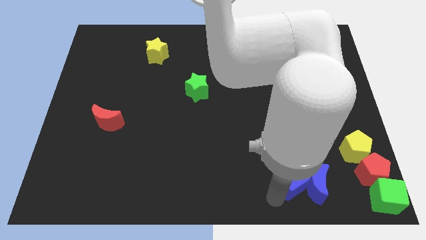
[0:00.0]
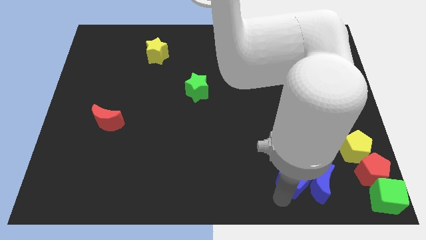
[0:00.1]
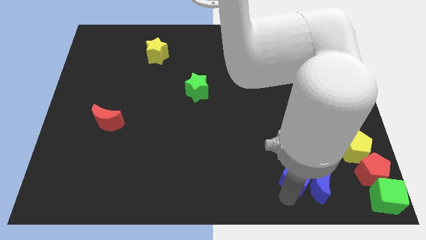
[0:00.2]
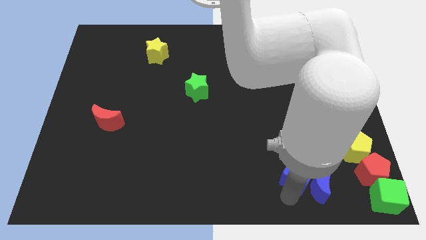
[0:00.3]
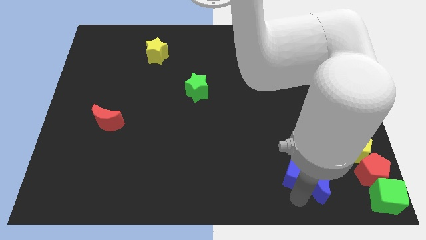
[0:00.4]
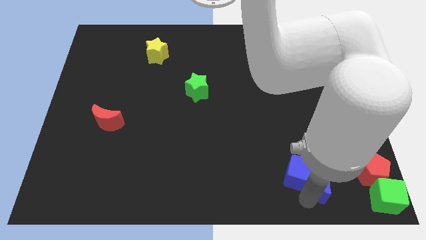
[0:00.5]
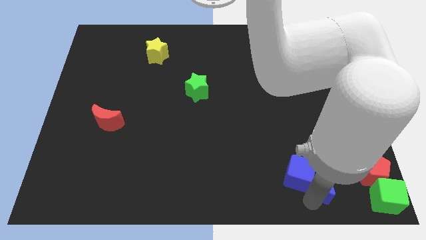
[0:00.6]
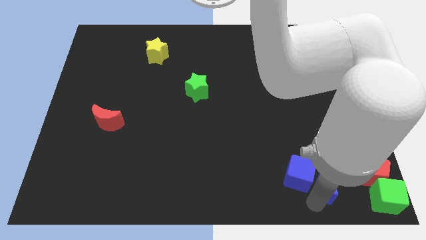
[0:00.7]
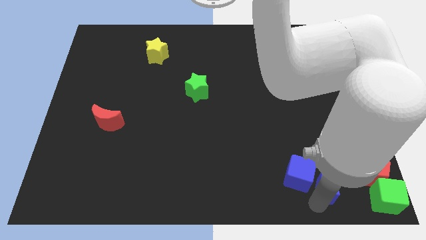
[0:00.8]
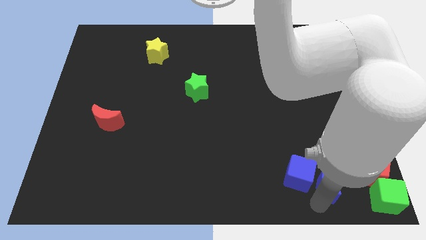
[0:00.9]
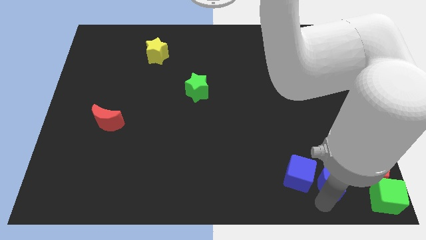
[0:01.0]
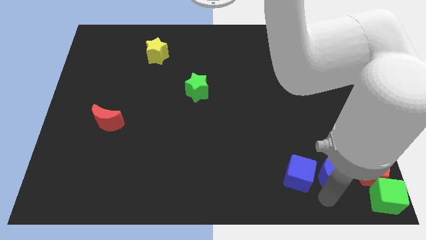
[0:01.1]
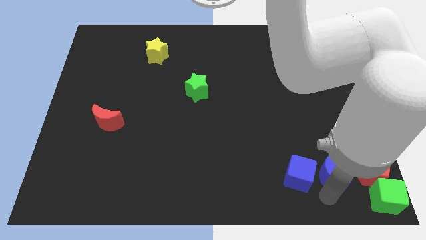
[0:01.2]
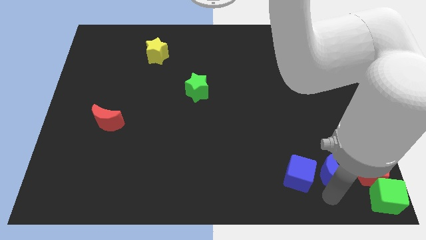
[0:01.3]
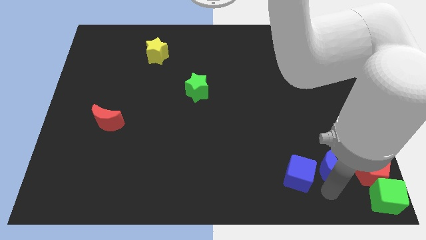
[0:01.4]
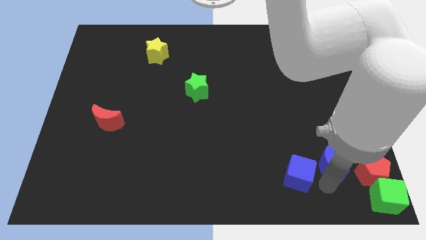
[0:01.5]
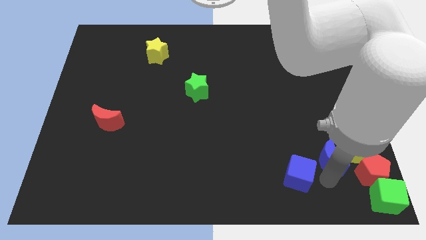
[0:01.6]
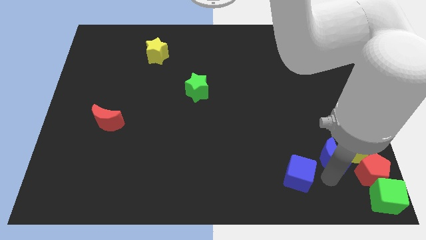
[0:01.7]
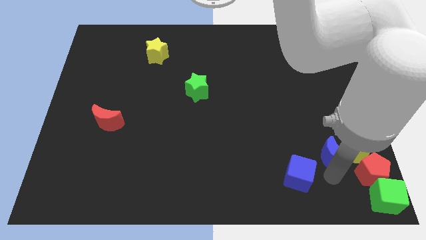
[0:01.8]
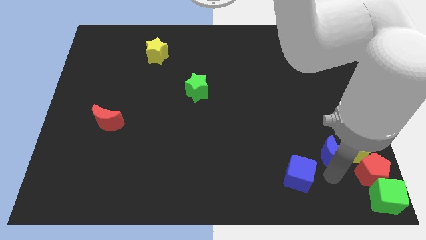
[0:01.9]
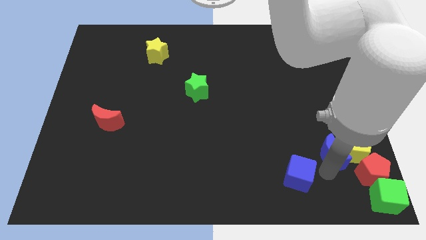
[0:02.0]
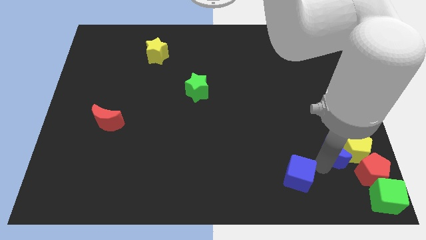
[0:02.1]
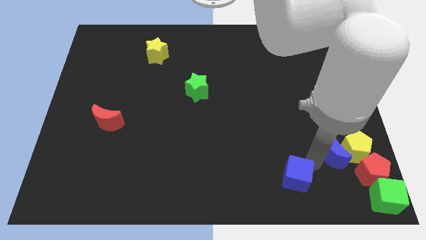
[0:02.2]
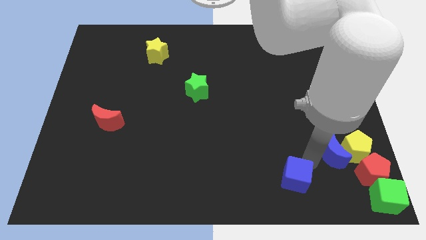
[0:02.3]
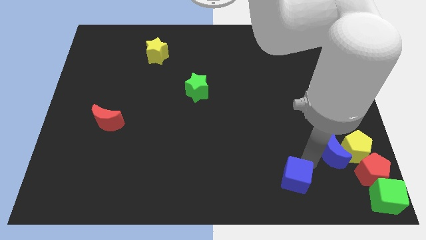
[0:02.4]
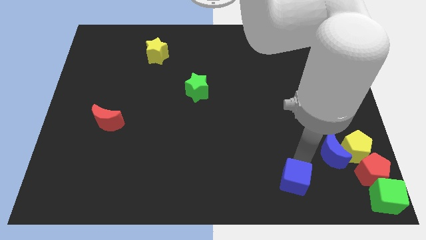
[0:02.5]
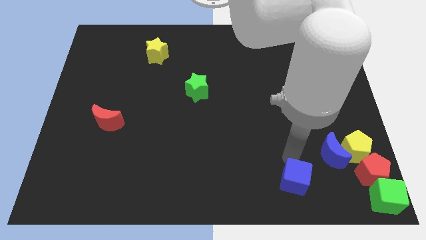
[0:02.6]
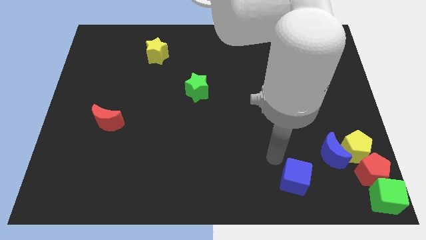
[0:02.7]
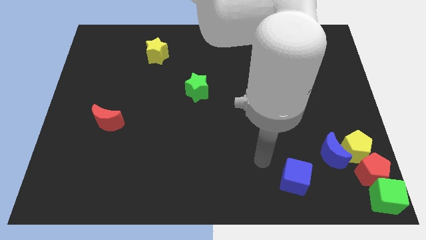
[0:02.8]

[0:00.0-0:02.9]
move the blue crescent to the left of the yellow pentagon

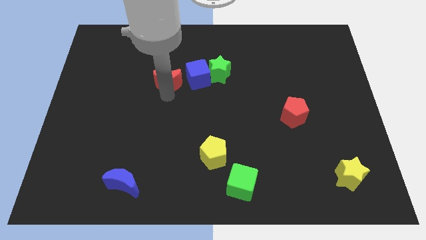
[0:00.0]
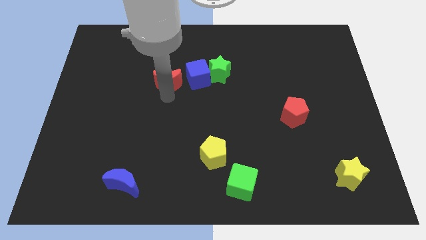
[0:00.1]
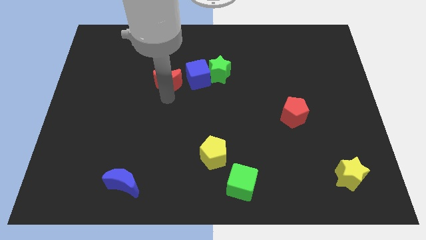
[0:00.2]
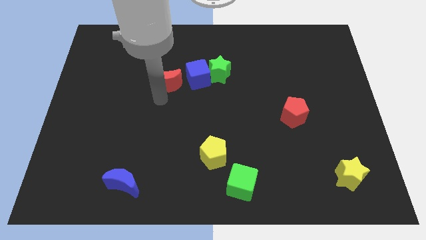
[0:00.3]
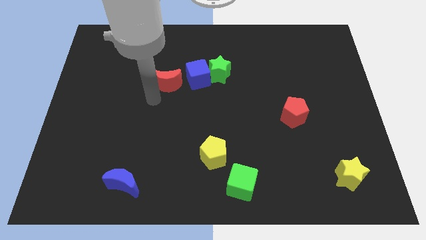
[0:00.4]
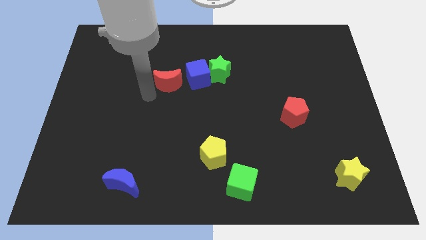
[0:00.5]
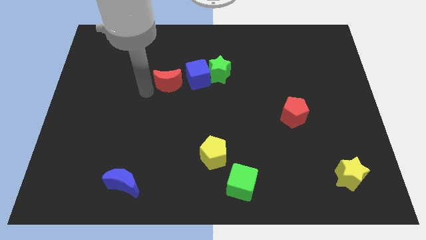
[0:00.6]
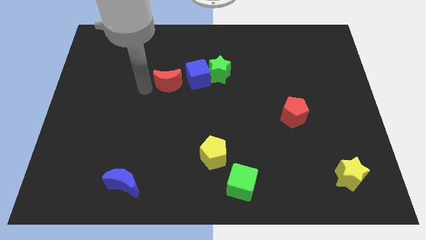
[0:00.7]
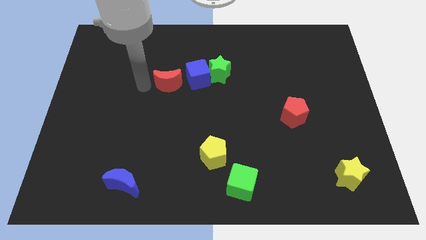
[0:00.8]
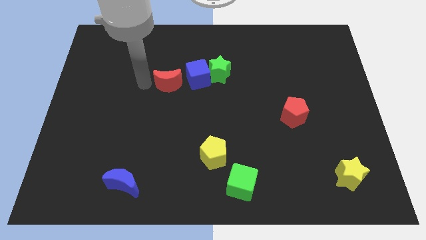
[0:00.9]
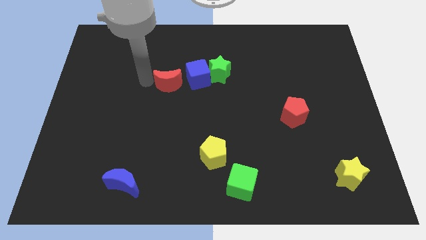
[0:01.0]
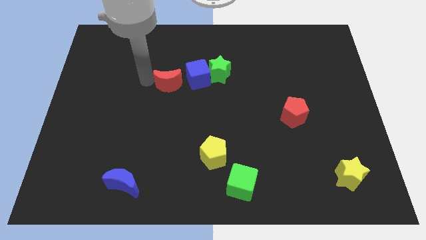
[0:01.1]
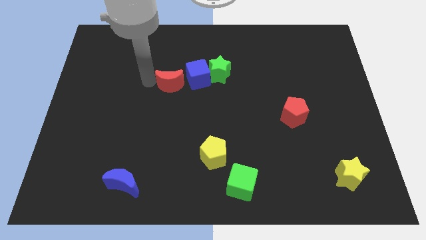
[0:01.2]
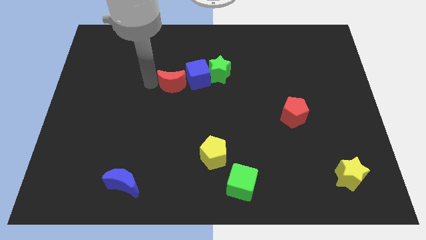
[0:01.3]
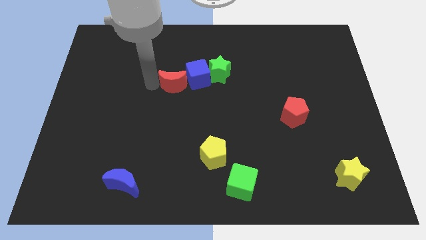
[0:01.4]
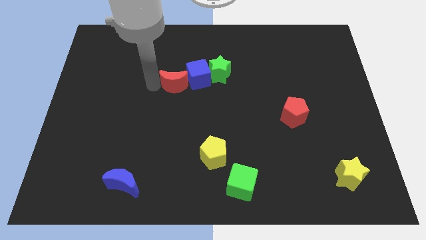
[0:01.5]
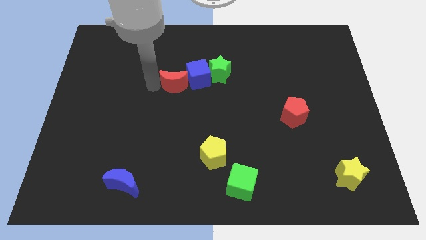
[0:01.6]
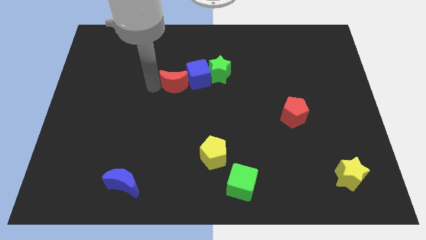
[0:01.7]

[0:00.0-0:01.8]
move the red crescent slightly into the blue cube

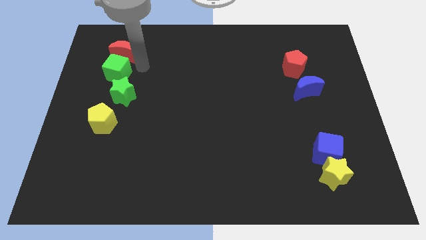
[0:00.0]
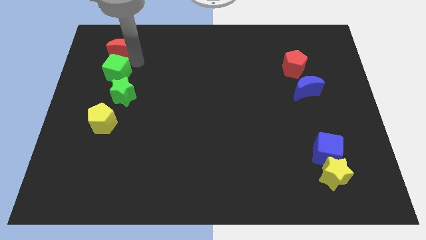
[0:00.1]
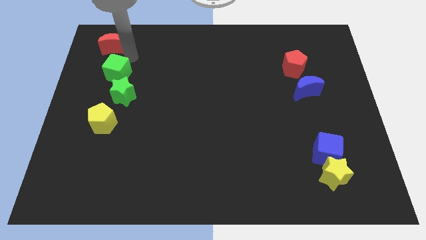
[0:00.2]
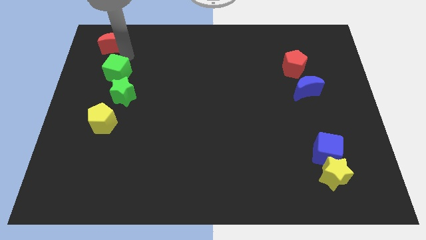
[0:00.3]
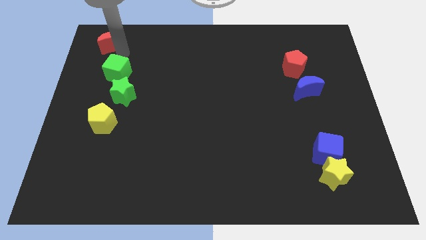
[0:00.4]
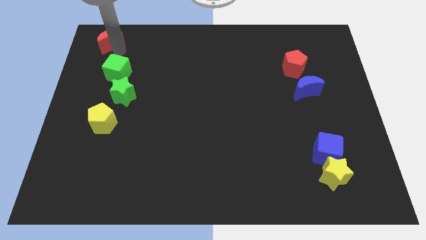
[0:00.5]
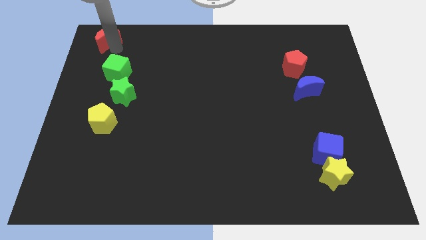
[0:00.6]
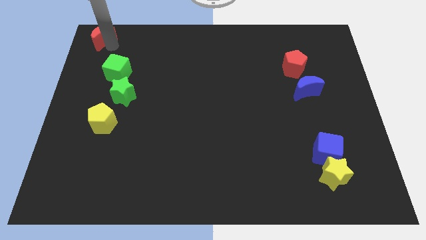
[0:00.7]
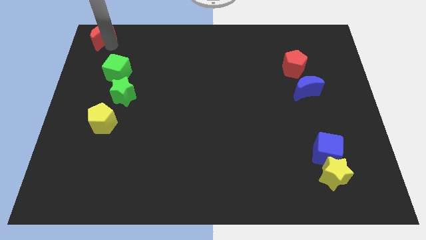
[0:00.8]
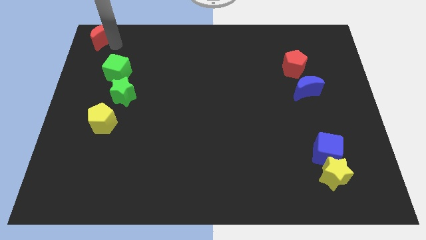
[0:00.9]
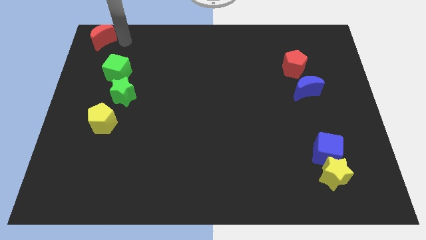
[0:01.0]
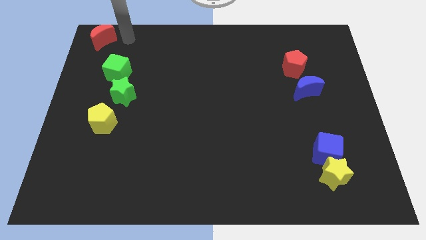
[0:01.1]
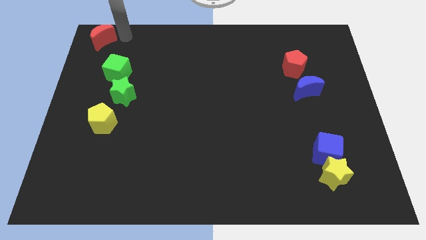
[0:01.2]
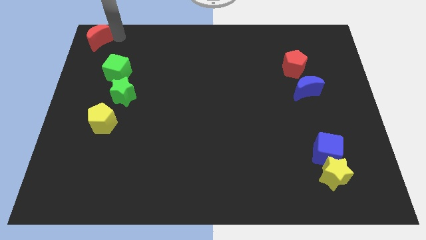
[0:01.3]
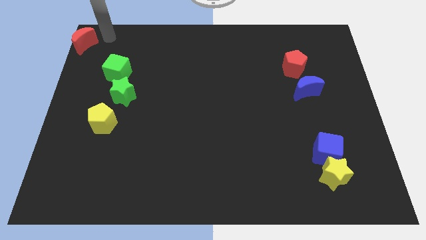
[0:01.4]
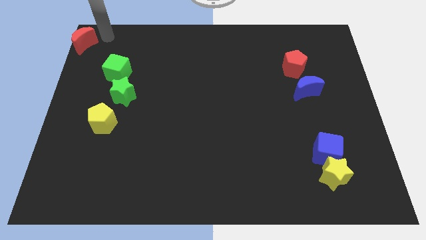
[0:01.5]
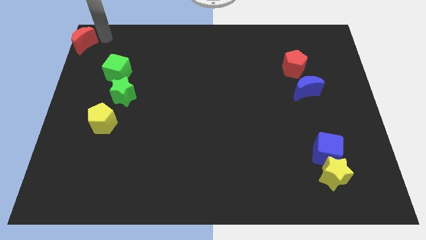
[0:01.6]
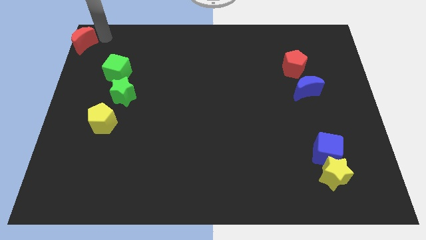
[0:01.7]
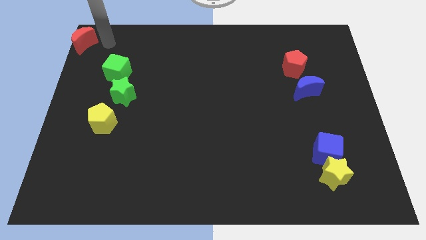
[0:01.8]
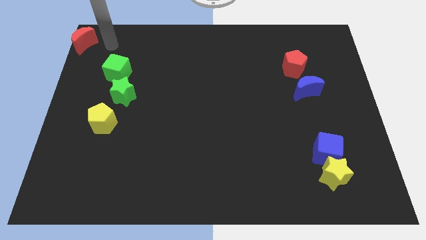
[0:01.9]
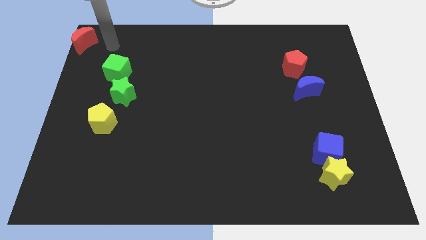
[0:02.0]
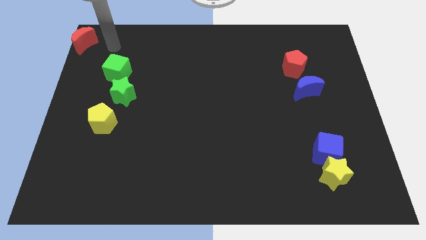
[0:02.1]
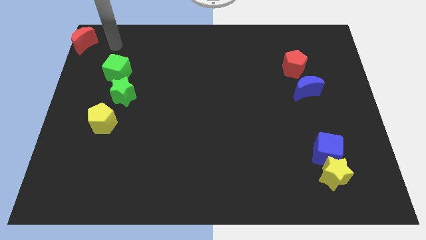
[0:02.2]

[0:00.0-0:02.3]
place the red moon at the top left of the board

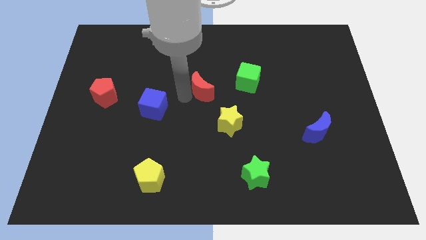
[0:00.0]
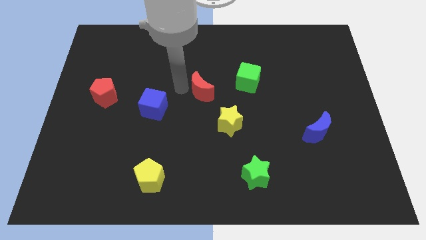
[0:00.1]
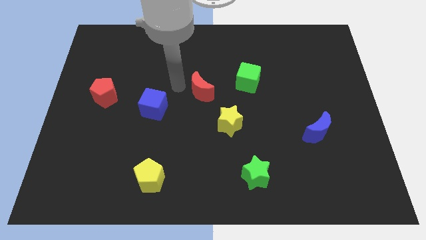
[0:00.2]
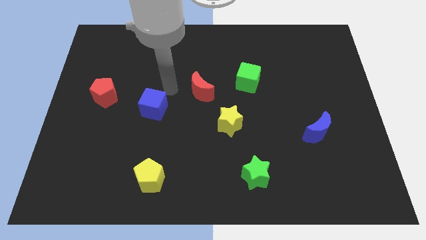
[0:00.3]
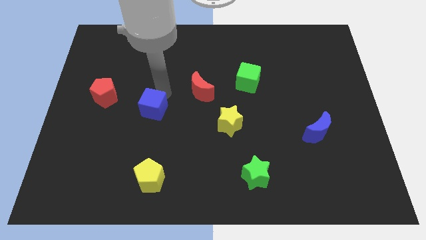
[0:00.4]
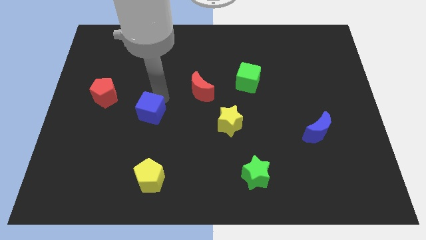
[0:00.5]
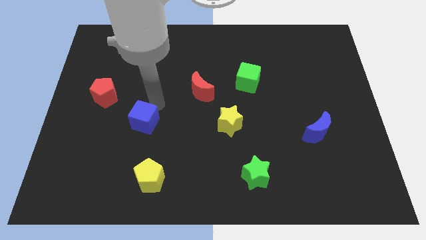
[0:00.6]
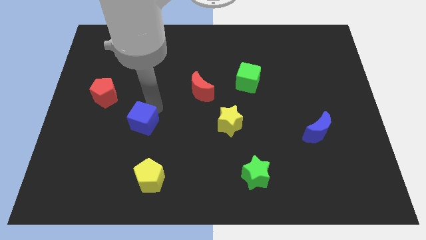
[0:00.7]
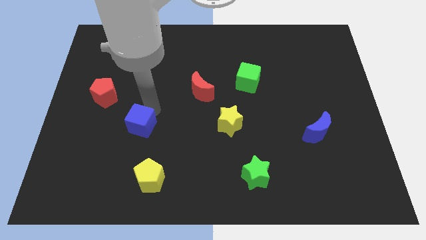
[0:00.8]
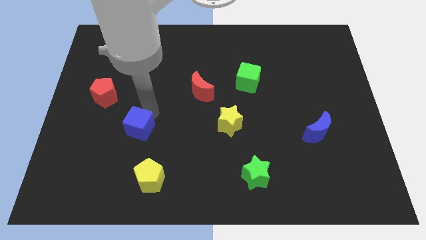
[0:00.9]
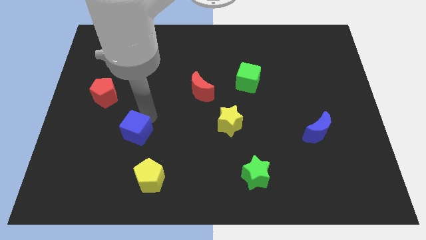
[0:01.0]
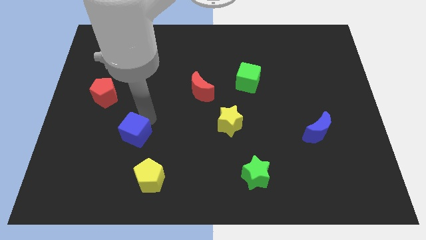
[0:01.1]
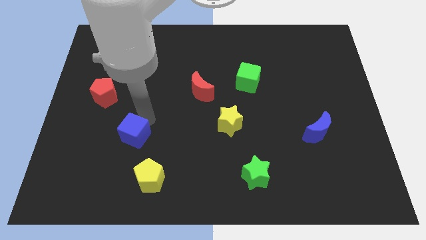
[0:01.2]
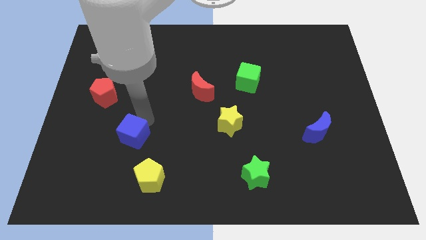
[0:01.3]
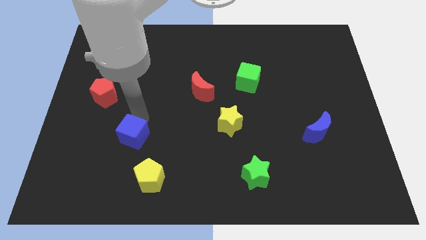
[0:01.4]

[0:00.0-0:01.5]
push the blue cube towards the top of the yellow pentagon

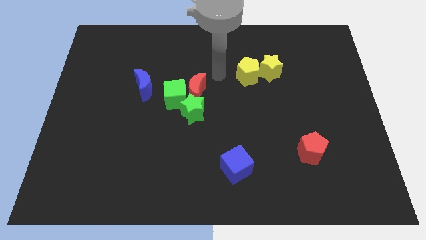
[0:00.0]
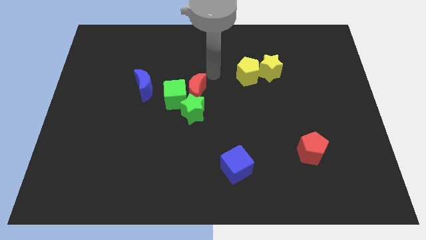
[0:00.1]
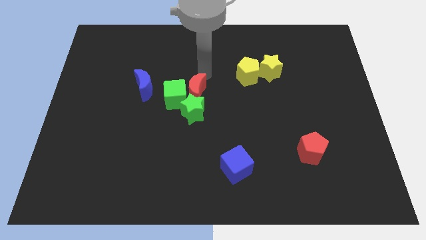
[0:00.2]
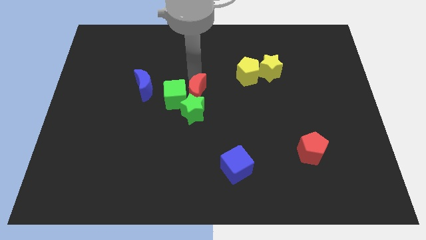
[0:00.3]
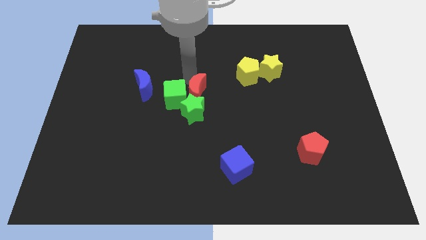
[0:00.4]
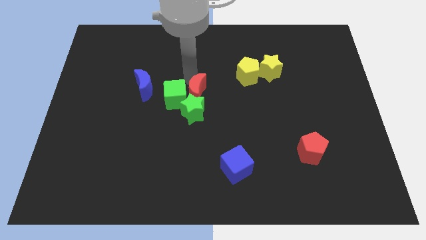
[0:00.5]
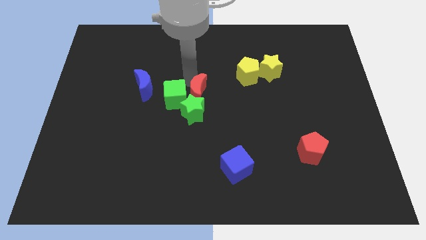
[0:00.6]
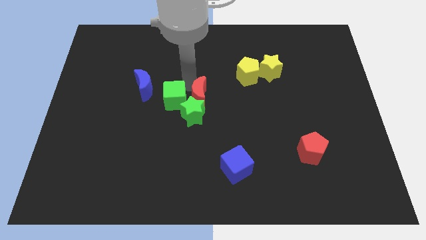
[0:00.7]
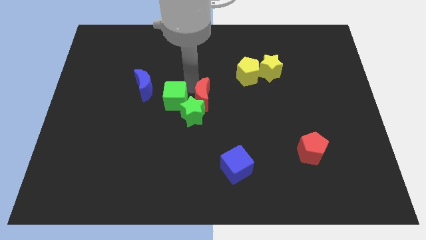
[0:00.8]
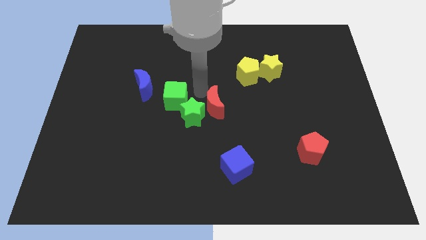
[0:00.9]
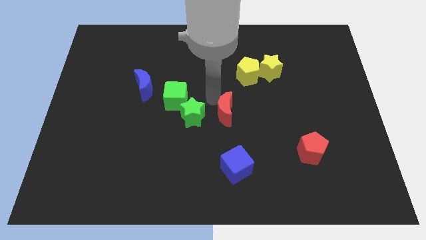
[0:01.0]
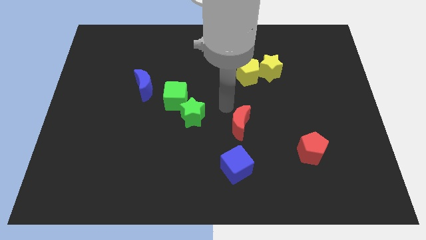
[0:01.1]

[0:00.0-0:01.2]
separate red moon and green star
